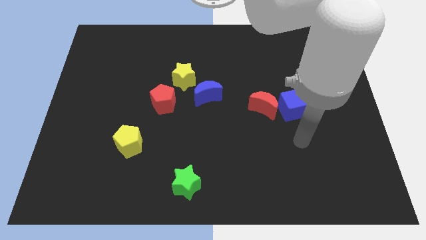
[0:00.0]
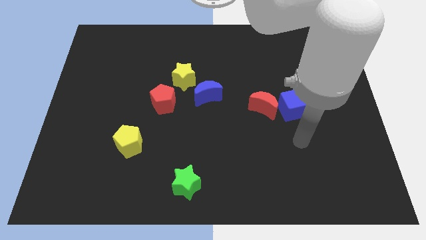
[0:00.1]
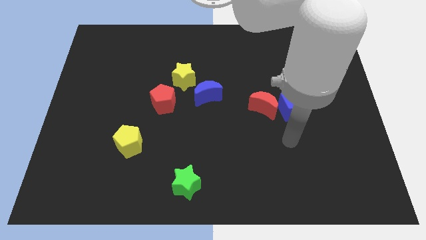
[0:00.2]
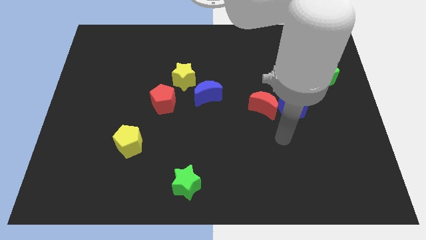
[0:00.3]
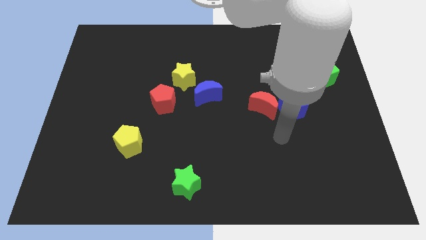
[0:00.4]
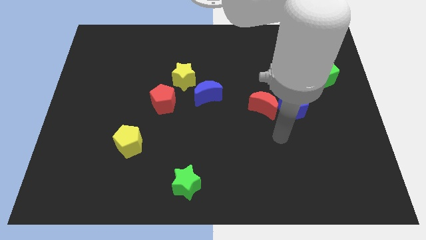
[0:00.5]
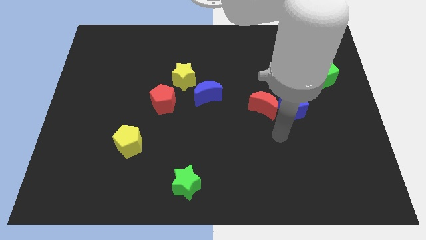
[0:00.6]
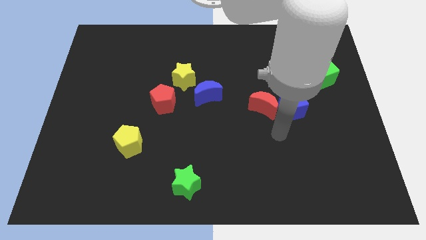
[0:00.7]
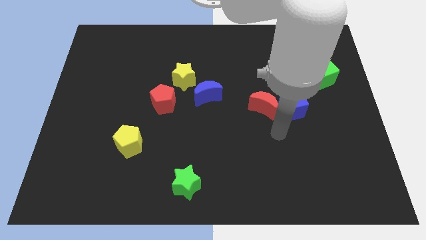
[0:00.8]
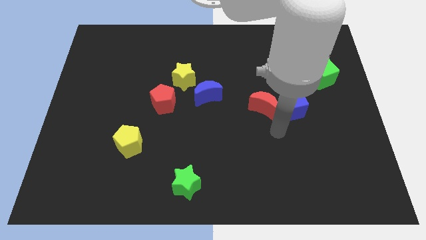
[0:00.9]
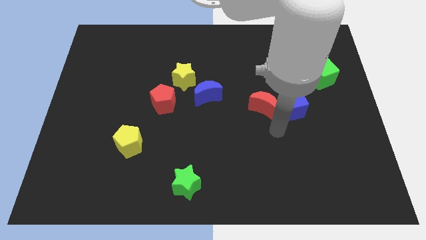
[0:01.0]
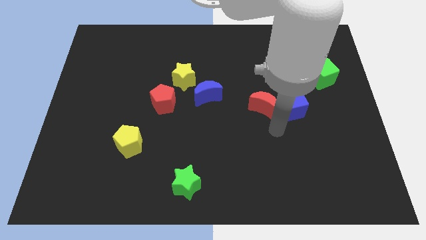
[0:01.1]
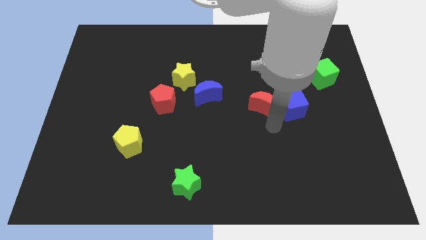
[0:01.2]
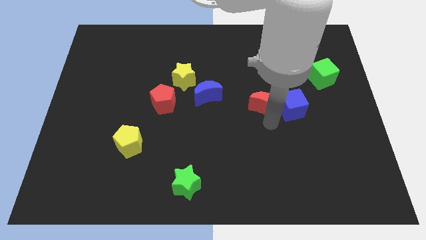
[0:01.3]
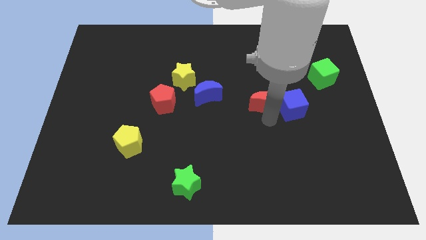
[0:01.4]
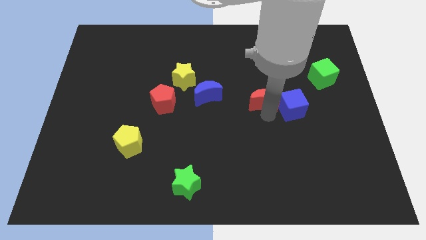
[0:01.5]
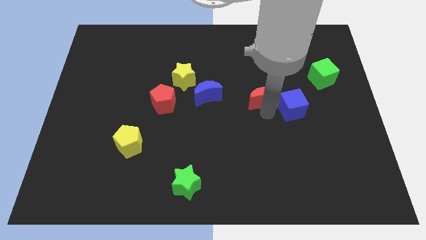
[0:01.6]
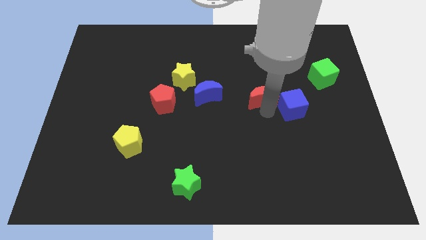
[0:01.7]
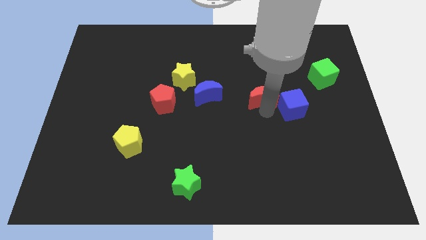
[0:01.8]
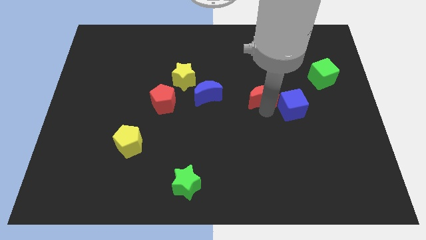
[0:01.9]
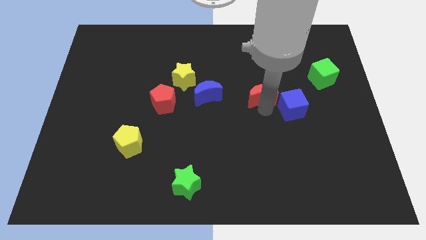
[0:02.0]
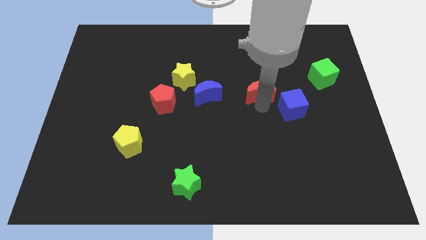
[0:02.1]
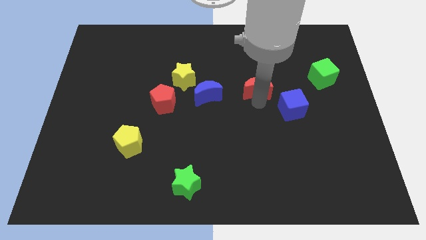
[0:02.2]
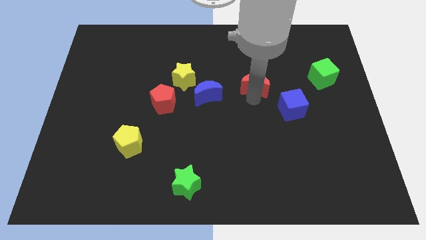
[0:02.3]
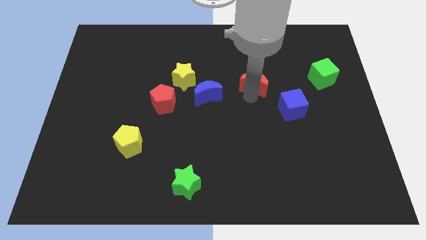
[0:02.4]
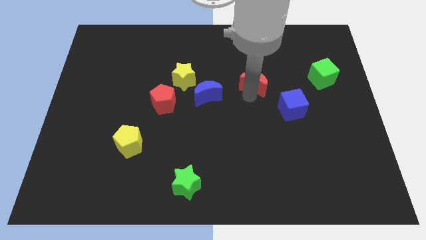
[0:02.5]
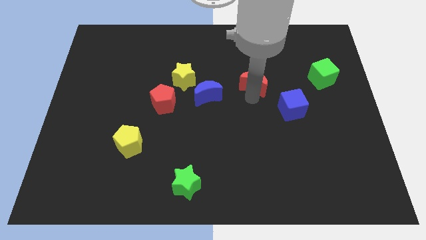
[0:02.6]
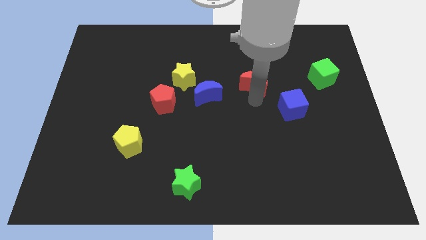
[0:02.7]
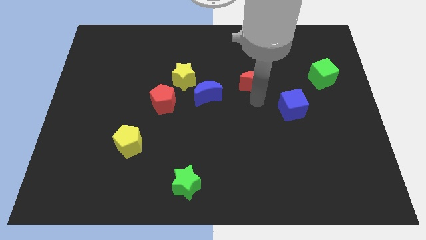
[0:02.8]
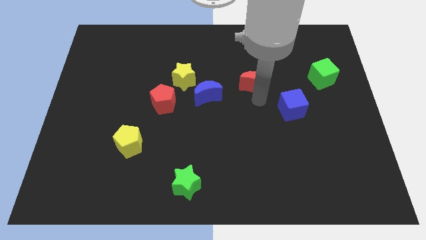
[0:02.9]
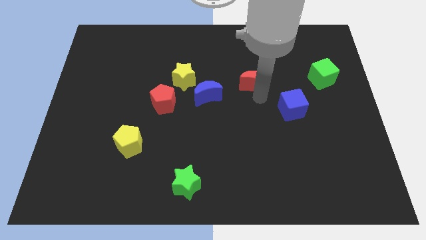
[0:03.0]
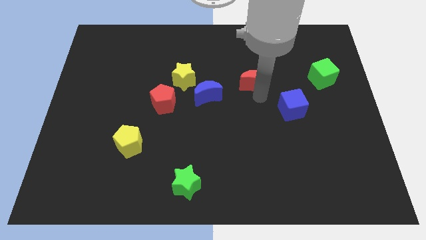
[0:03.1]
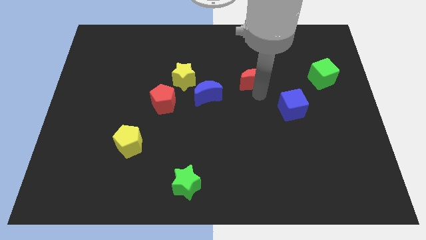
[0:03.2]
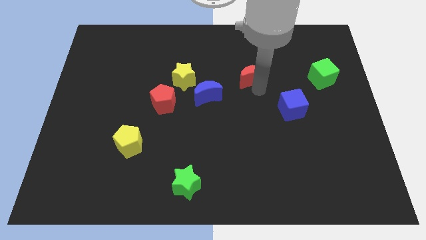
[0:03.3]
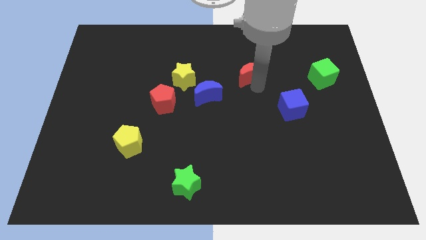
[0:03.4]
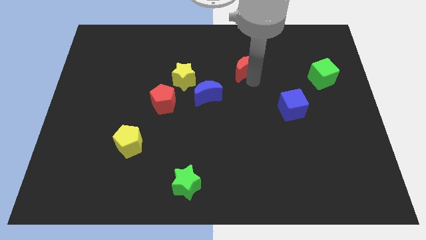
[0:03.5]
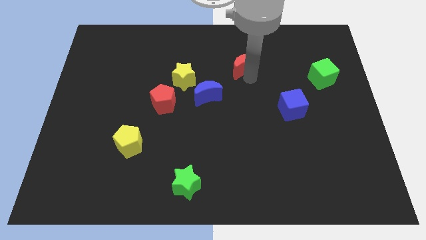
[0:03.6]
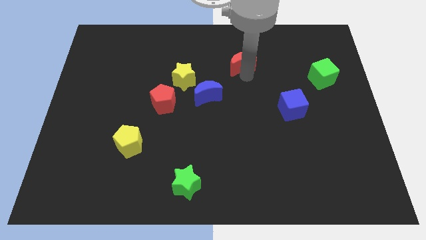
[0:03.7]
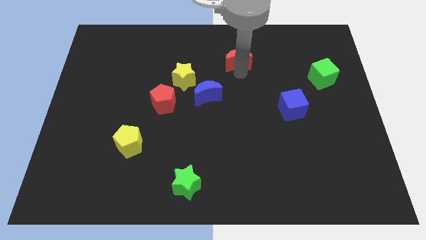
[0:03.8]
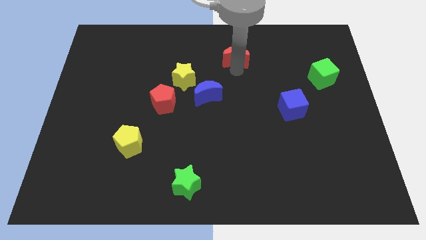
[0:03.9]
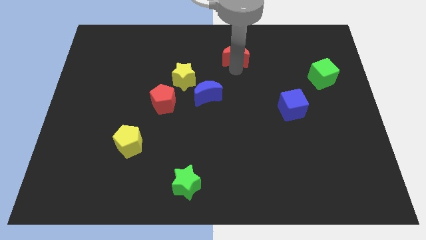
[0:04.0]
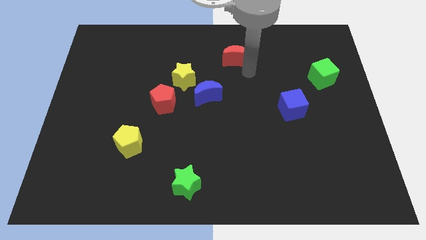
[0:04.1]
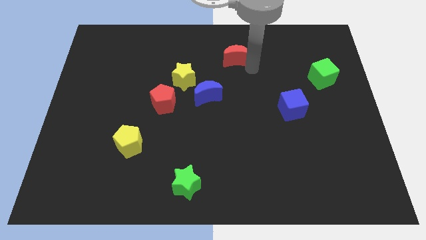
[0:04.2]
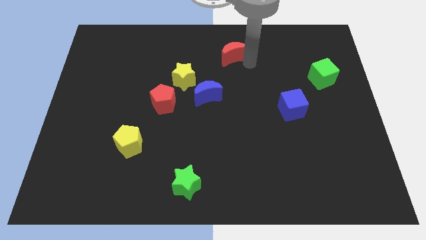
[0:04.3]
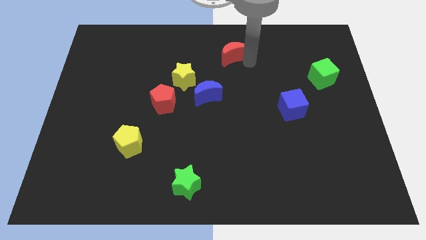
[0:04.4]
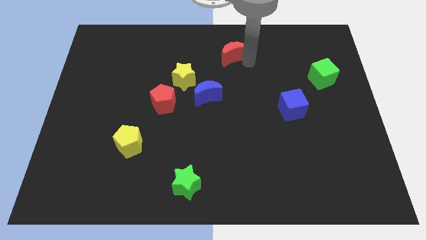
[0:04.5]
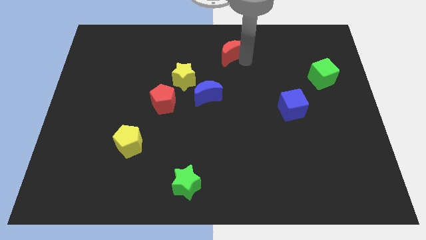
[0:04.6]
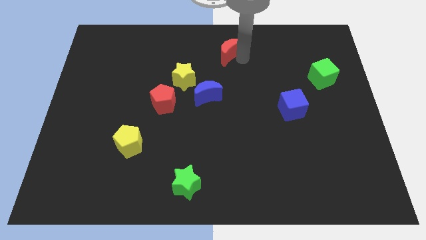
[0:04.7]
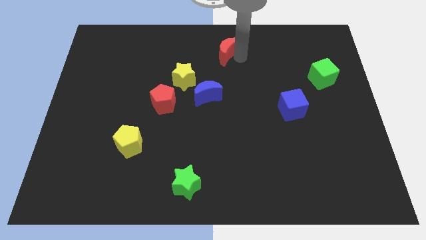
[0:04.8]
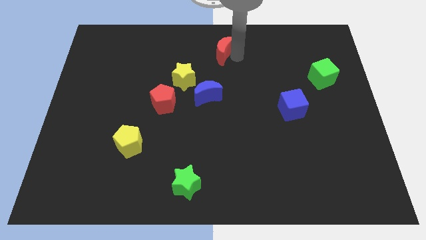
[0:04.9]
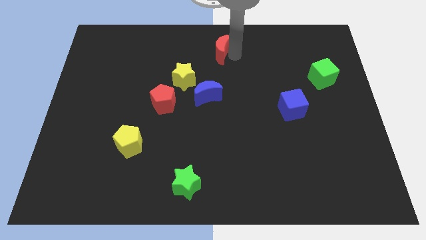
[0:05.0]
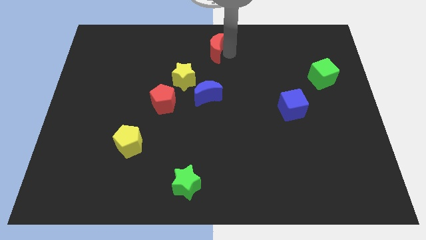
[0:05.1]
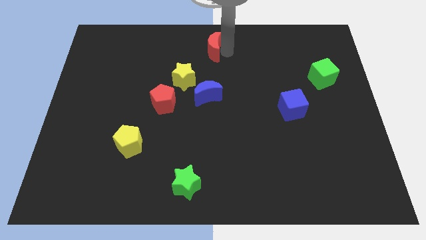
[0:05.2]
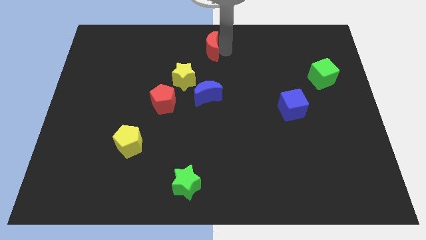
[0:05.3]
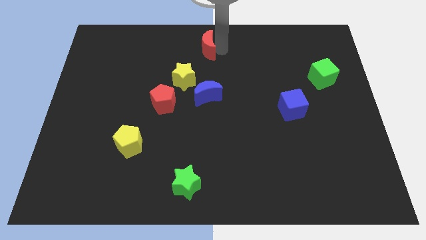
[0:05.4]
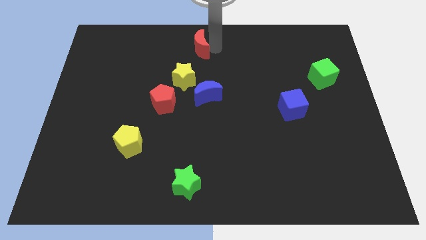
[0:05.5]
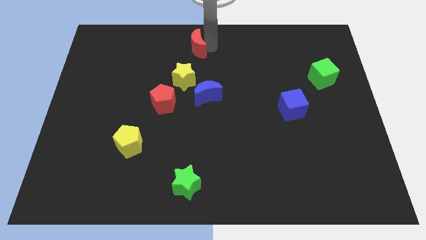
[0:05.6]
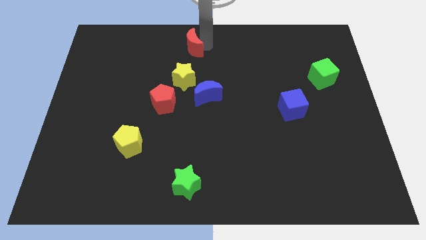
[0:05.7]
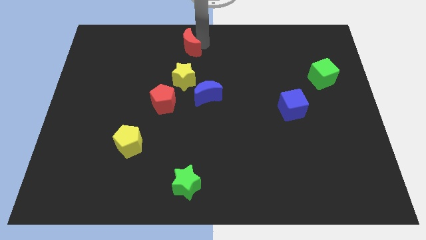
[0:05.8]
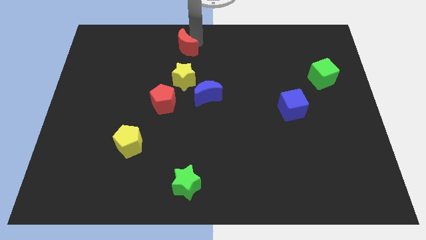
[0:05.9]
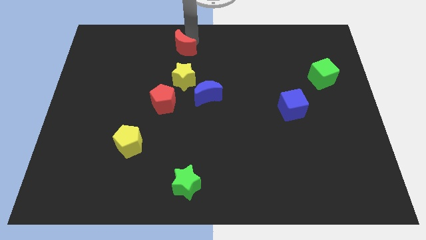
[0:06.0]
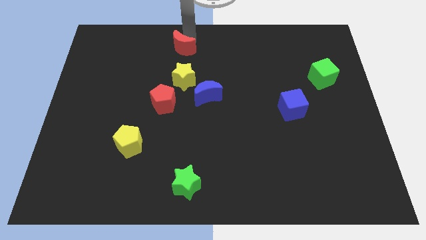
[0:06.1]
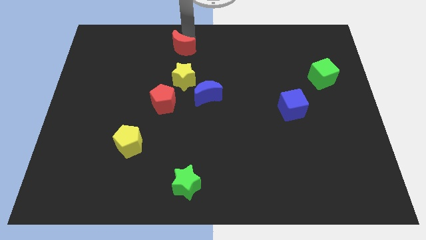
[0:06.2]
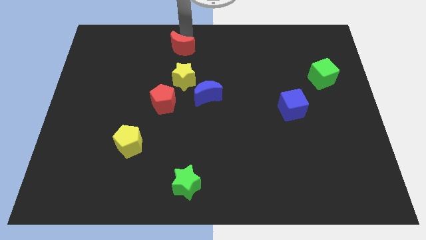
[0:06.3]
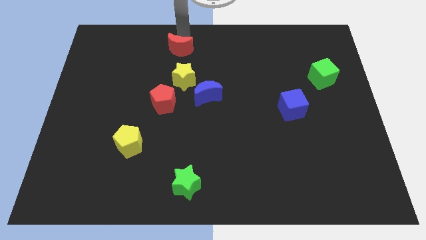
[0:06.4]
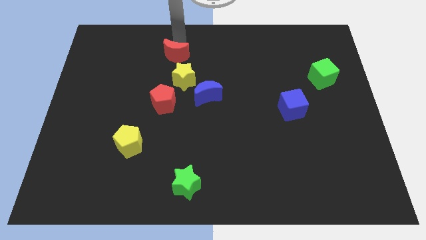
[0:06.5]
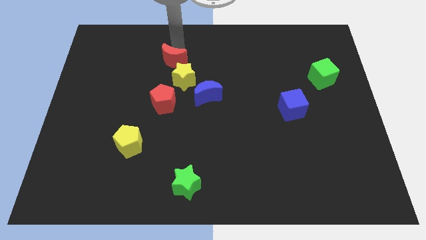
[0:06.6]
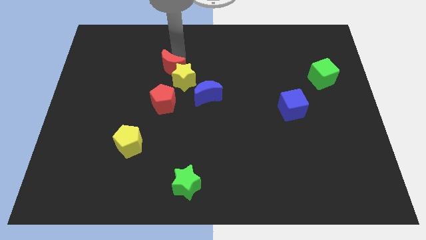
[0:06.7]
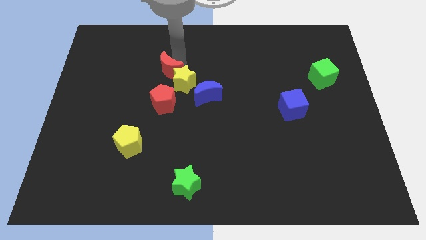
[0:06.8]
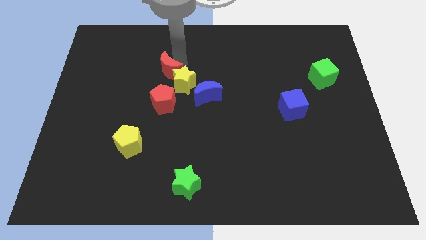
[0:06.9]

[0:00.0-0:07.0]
move the red moon towards the yellow star

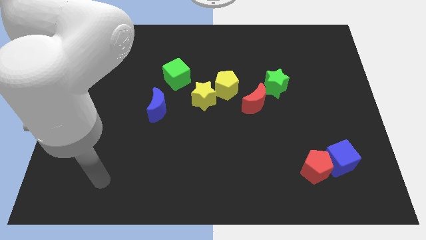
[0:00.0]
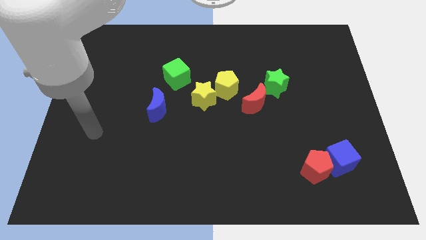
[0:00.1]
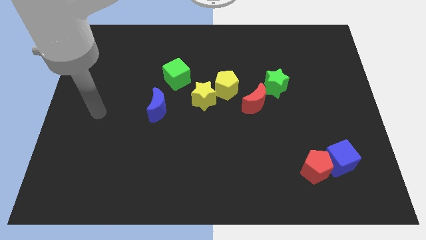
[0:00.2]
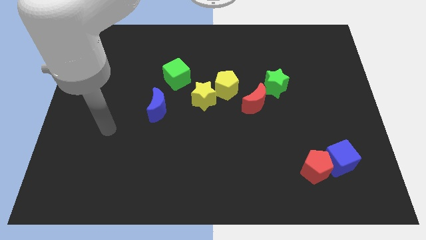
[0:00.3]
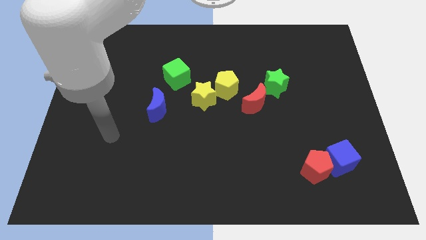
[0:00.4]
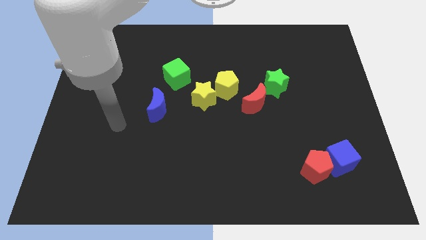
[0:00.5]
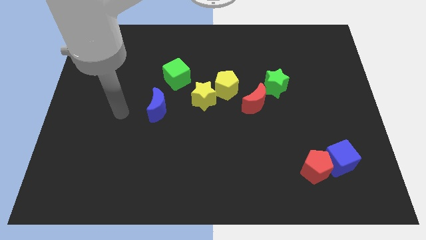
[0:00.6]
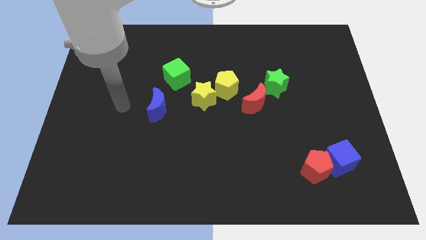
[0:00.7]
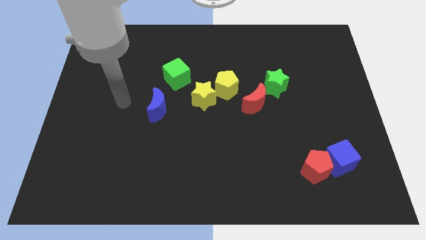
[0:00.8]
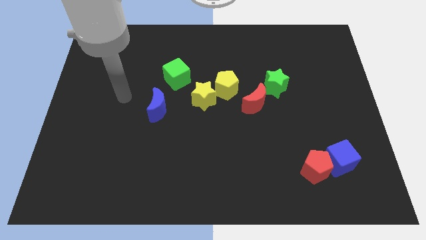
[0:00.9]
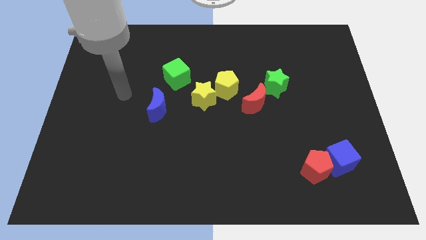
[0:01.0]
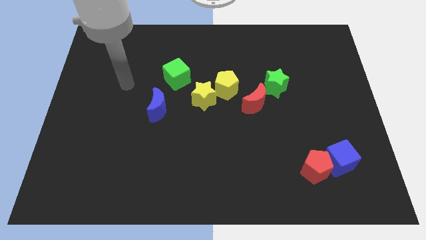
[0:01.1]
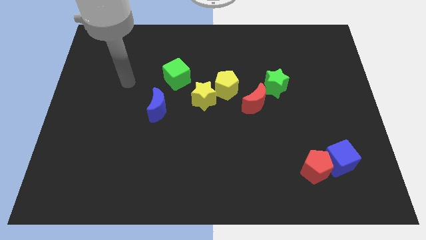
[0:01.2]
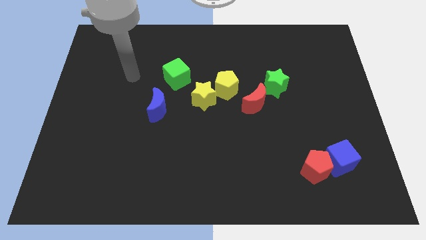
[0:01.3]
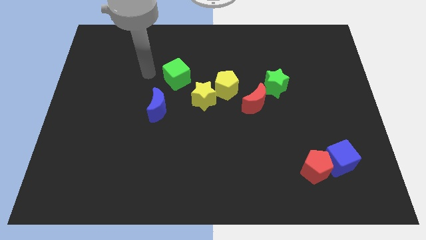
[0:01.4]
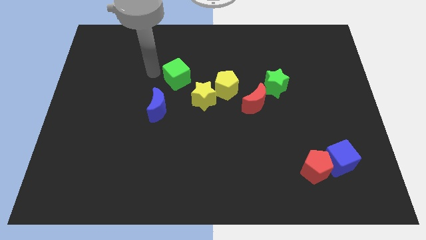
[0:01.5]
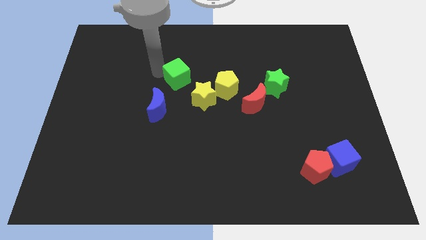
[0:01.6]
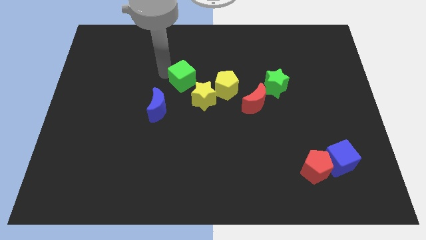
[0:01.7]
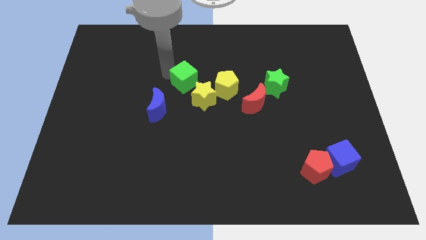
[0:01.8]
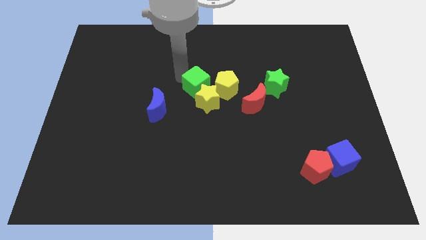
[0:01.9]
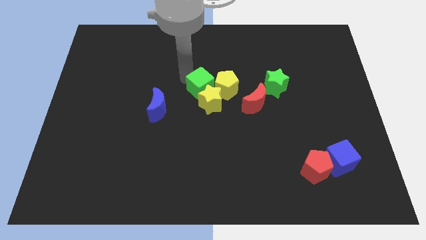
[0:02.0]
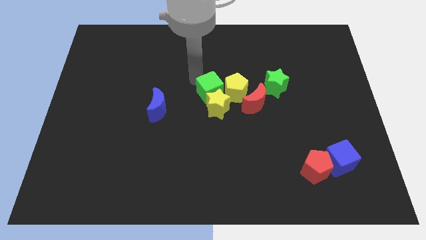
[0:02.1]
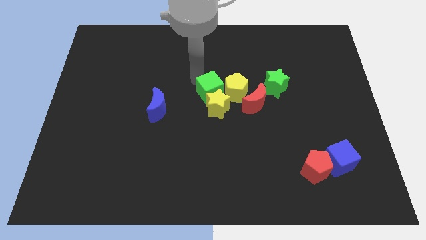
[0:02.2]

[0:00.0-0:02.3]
put the green cube next to the yellow pentagon
